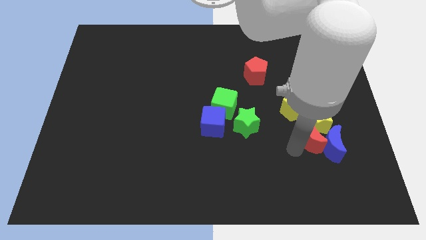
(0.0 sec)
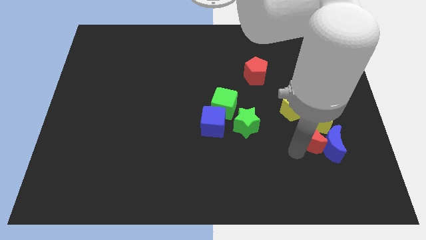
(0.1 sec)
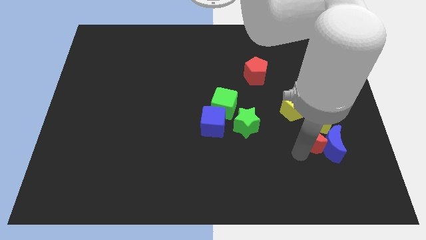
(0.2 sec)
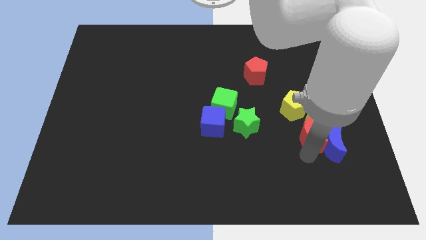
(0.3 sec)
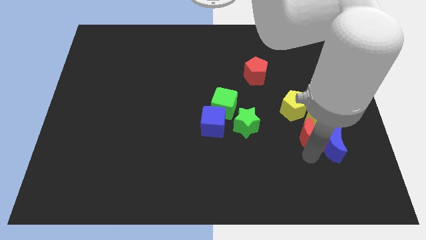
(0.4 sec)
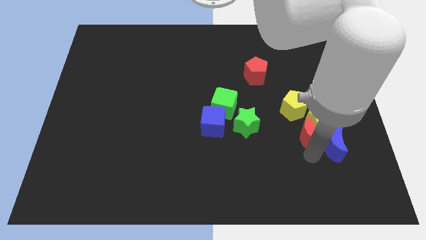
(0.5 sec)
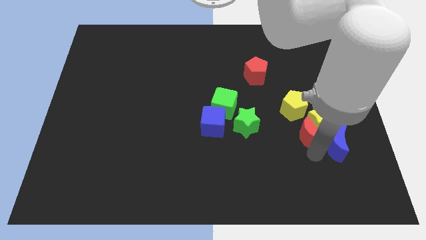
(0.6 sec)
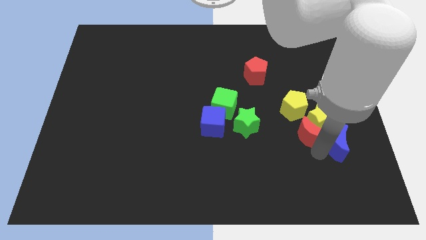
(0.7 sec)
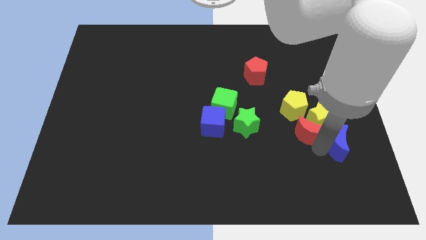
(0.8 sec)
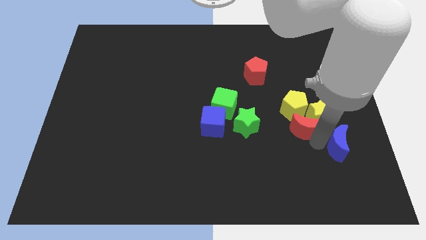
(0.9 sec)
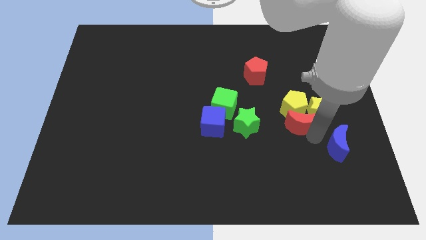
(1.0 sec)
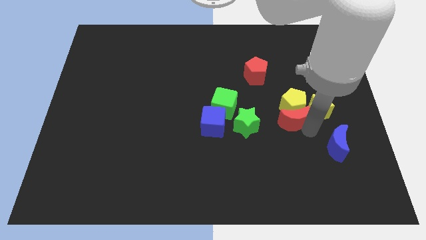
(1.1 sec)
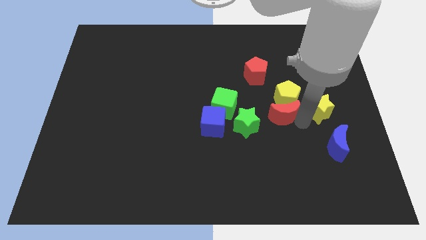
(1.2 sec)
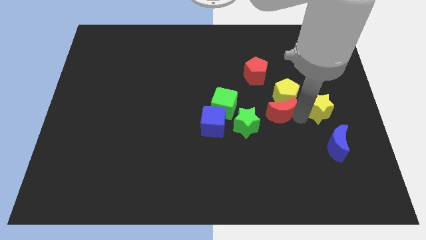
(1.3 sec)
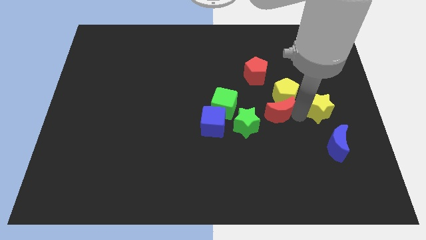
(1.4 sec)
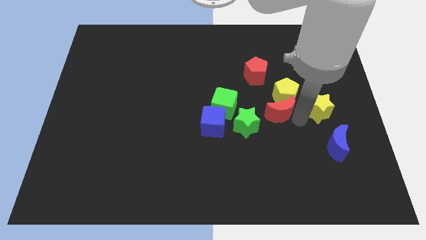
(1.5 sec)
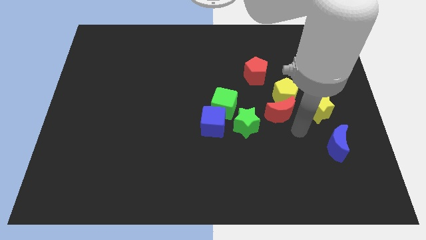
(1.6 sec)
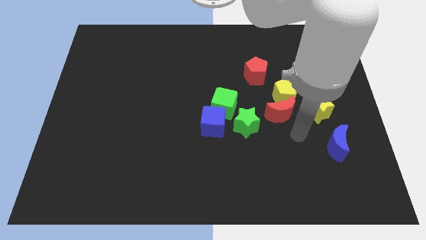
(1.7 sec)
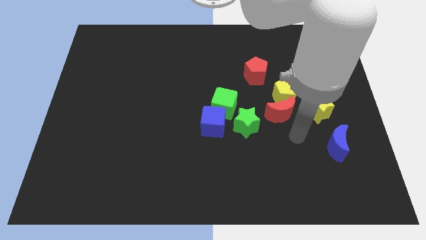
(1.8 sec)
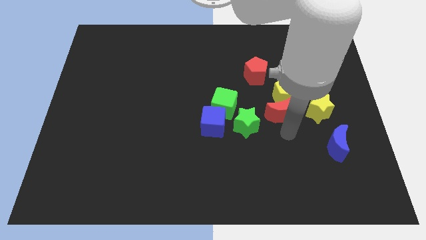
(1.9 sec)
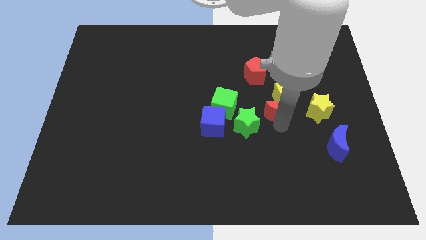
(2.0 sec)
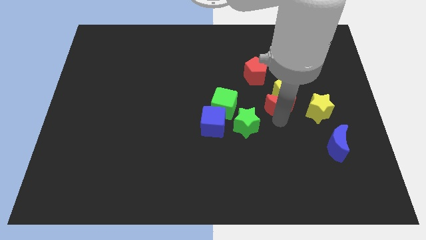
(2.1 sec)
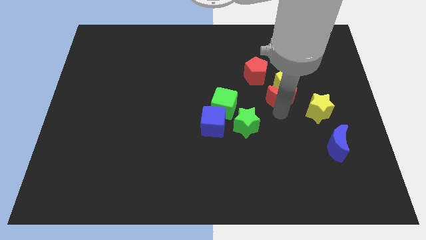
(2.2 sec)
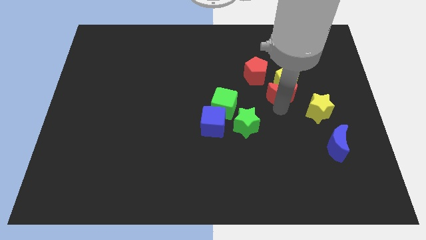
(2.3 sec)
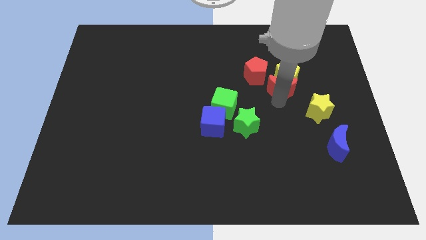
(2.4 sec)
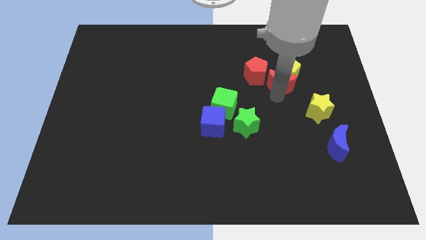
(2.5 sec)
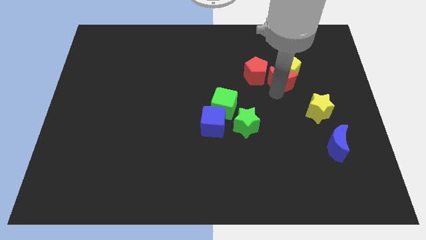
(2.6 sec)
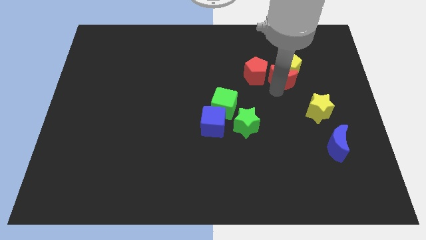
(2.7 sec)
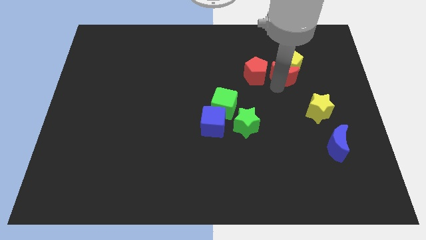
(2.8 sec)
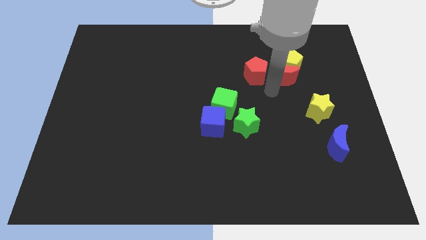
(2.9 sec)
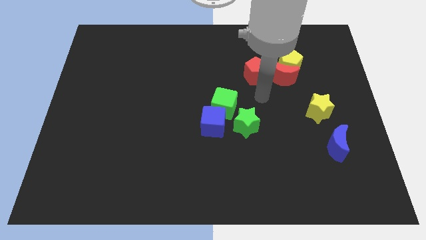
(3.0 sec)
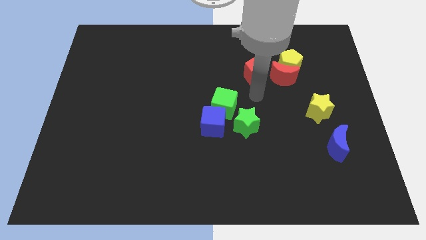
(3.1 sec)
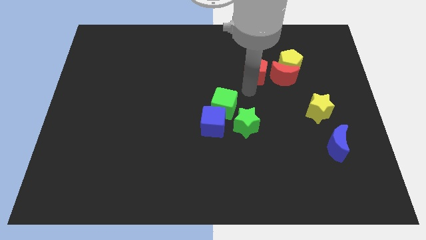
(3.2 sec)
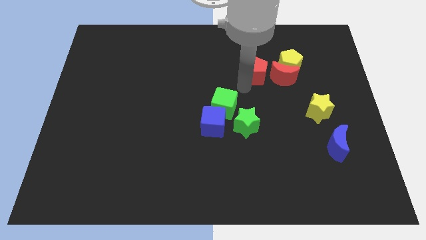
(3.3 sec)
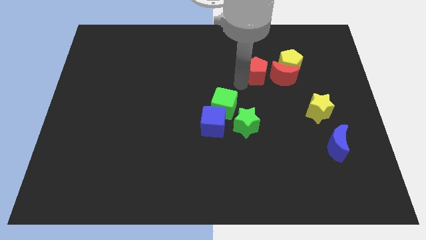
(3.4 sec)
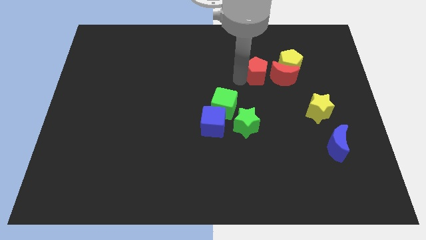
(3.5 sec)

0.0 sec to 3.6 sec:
slide yellow pentagon and red moon to the top side of the board

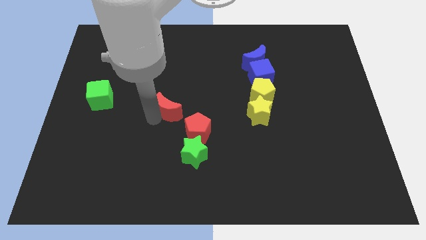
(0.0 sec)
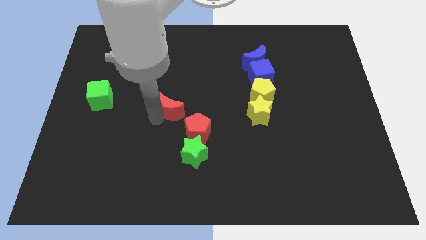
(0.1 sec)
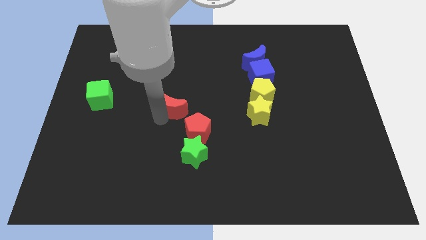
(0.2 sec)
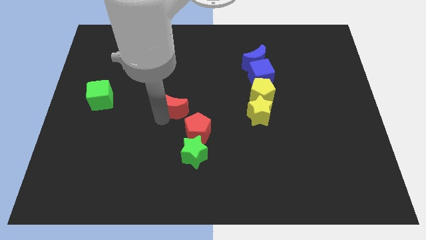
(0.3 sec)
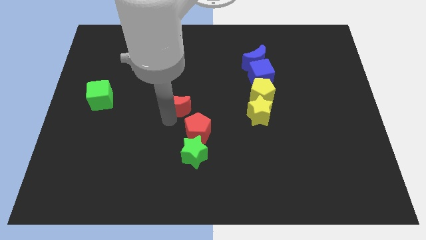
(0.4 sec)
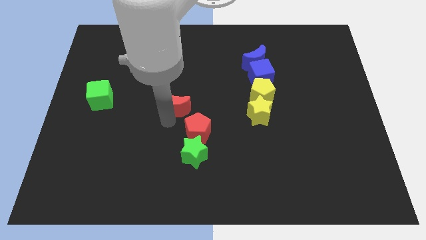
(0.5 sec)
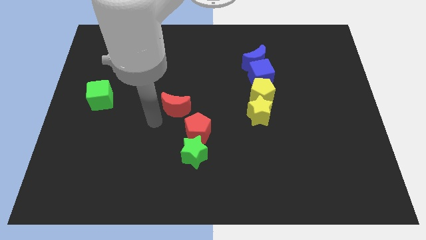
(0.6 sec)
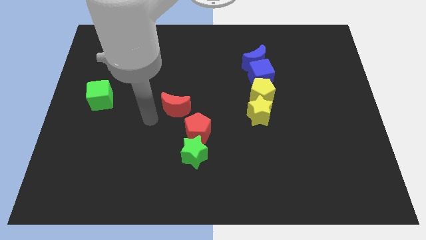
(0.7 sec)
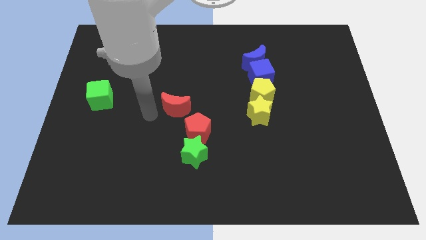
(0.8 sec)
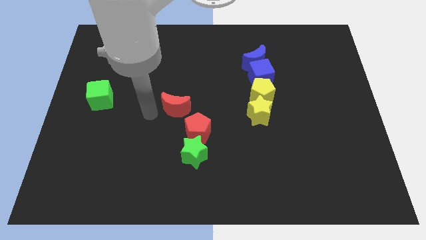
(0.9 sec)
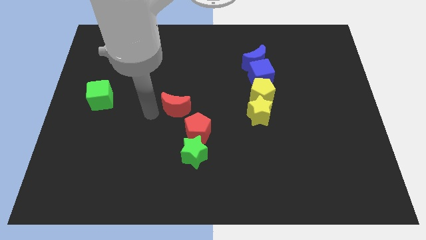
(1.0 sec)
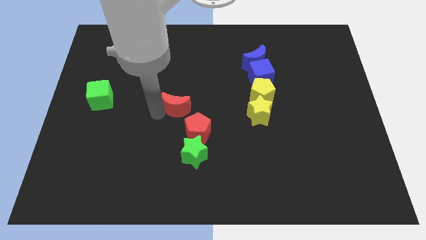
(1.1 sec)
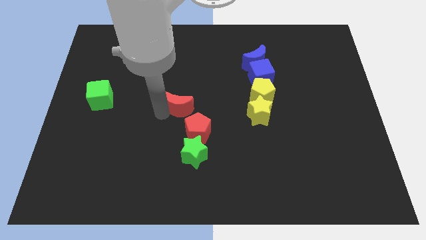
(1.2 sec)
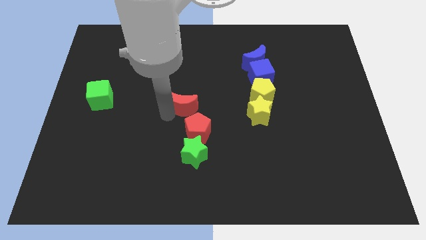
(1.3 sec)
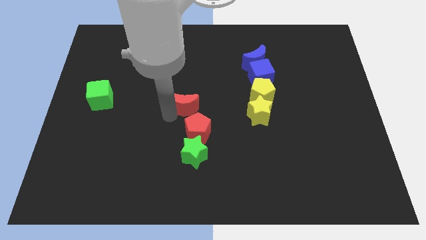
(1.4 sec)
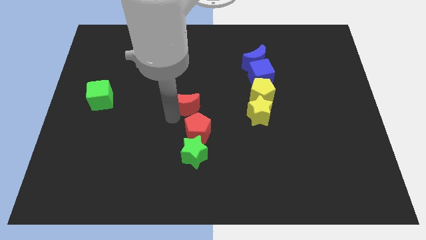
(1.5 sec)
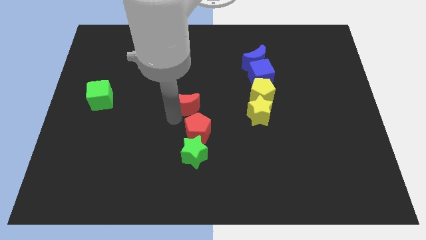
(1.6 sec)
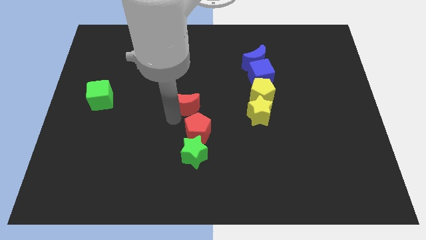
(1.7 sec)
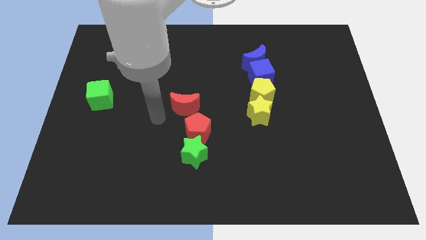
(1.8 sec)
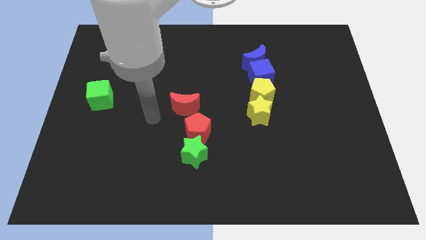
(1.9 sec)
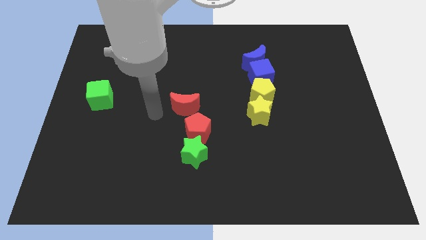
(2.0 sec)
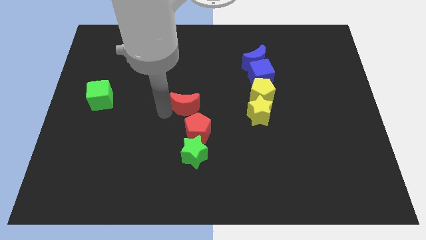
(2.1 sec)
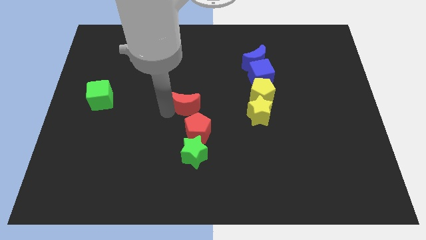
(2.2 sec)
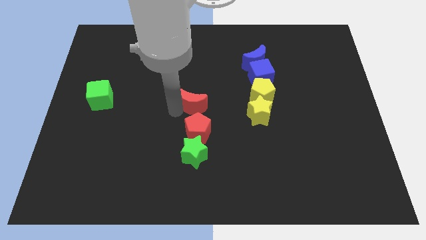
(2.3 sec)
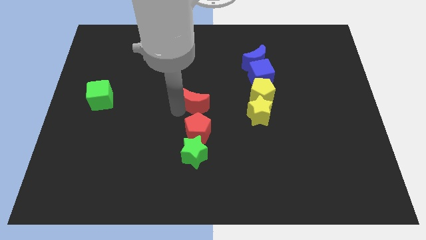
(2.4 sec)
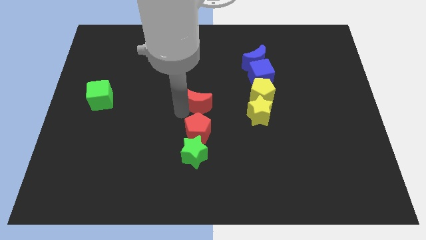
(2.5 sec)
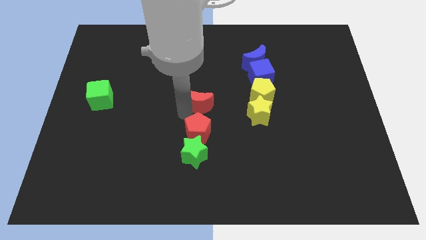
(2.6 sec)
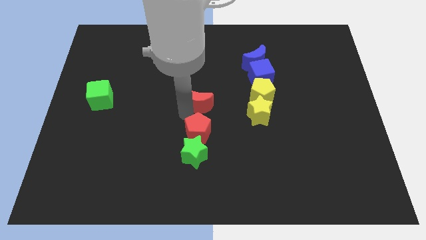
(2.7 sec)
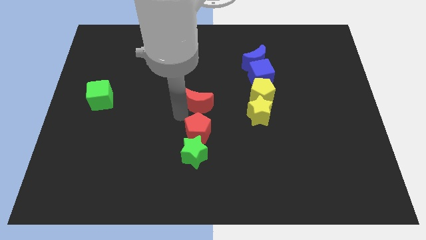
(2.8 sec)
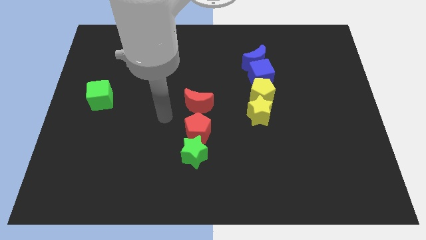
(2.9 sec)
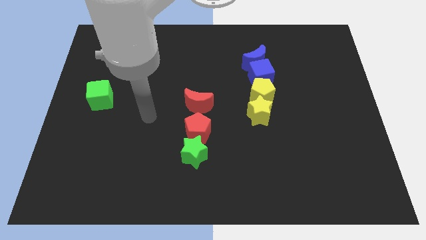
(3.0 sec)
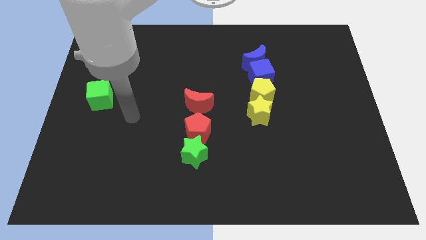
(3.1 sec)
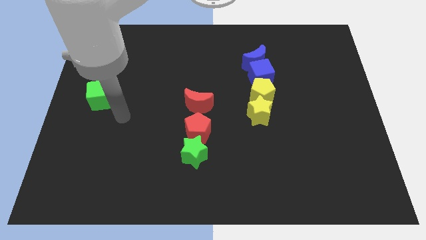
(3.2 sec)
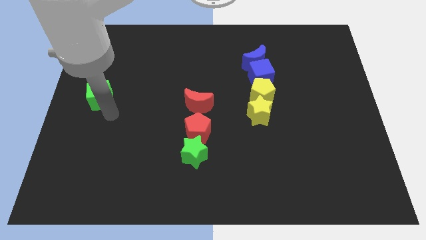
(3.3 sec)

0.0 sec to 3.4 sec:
move the red crescent to the top side of the red pentagon

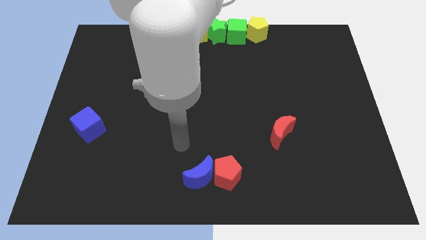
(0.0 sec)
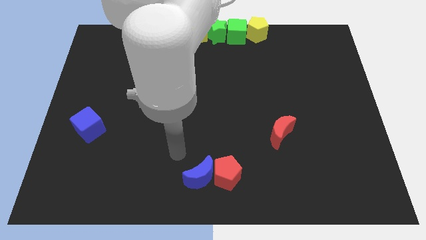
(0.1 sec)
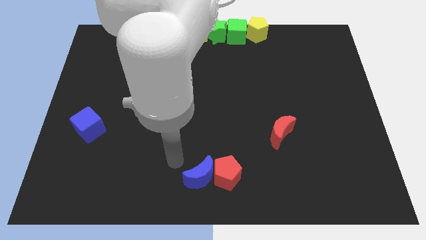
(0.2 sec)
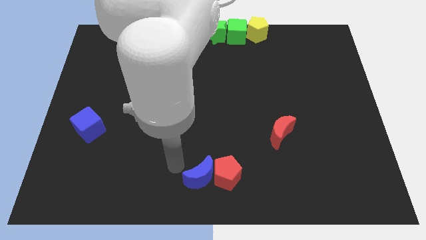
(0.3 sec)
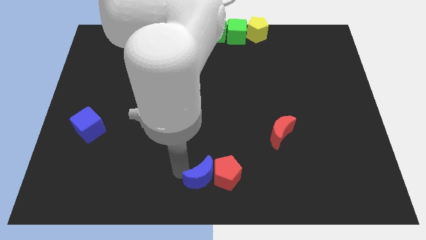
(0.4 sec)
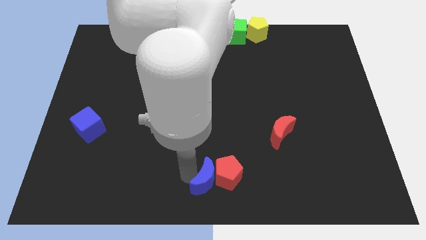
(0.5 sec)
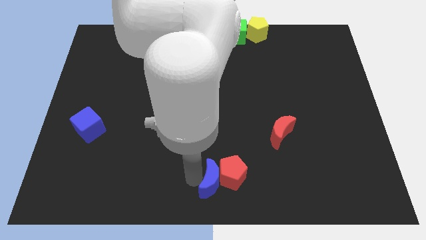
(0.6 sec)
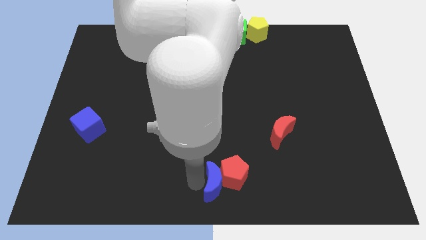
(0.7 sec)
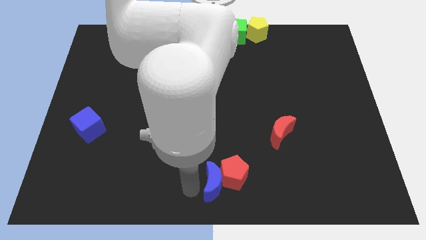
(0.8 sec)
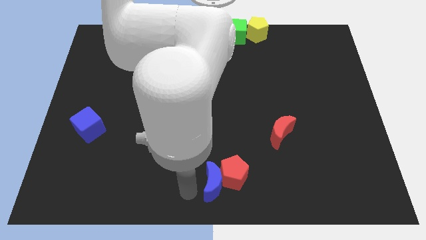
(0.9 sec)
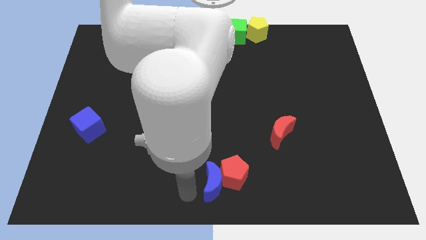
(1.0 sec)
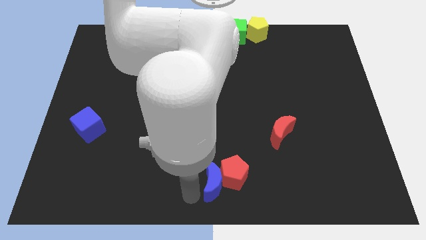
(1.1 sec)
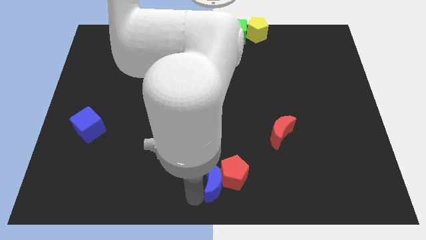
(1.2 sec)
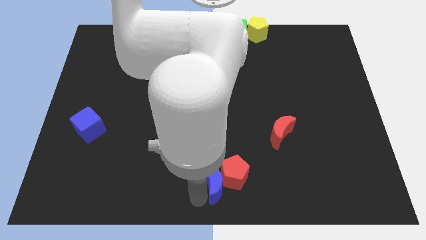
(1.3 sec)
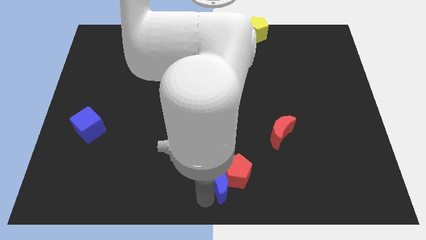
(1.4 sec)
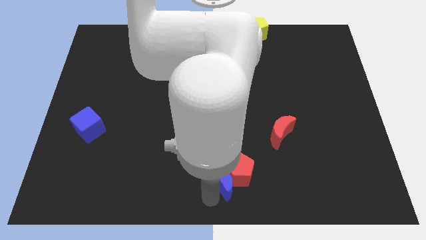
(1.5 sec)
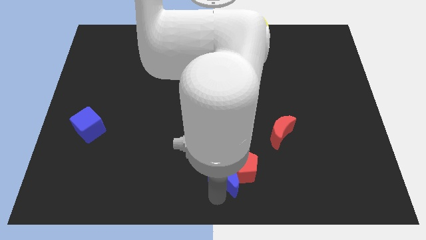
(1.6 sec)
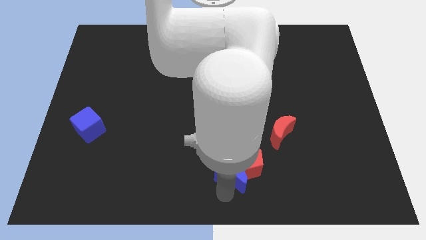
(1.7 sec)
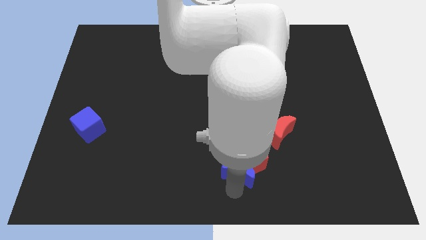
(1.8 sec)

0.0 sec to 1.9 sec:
slightly push the blue crescent along with the red pentagon towards right of the board

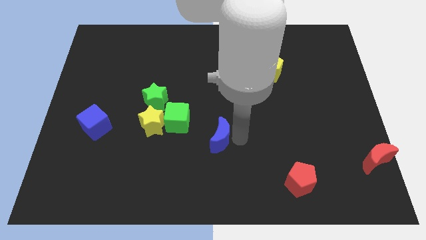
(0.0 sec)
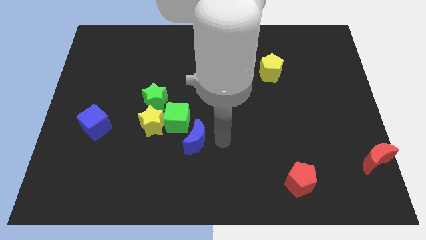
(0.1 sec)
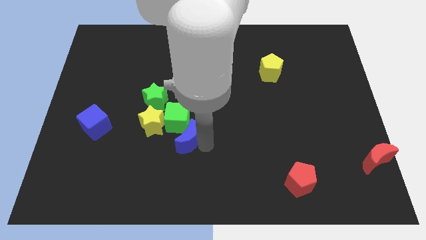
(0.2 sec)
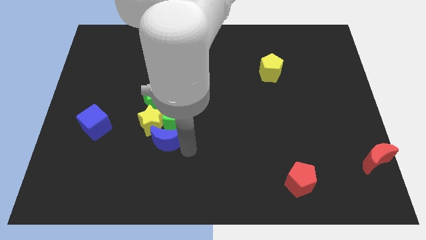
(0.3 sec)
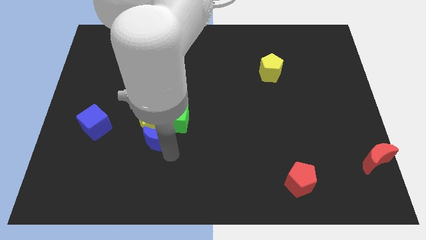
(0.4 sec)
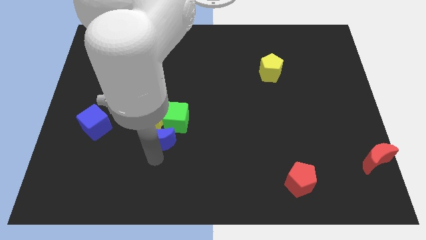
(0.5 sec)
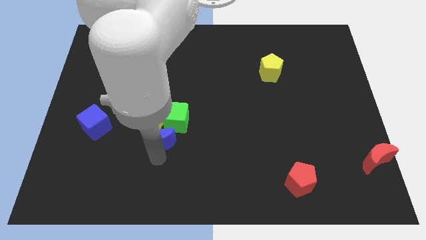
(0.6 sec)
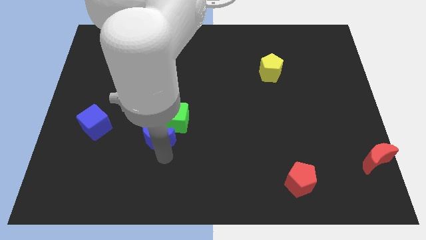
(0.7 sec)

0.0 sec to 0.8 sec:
move the blue moon into the group of blocks
